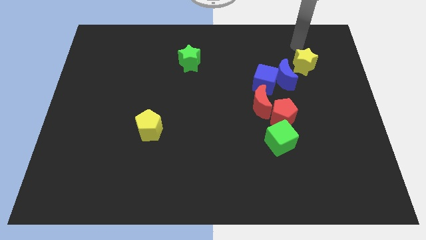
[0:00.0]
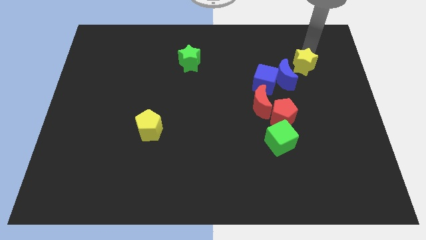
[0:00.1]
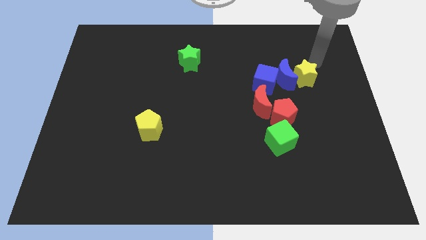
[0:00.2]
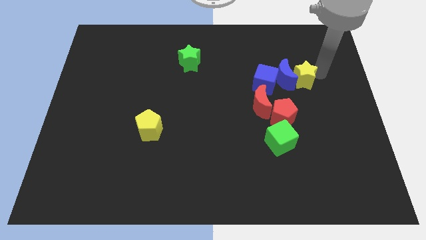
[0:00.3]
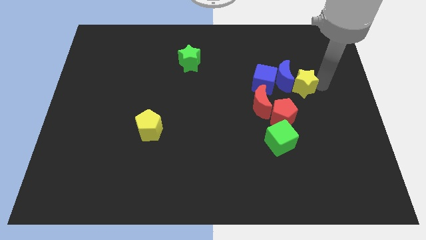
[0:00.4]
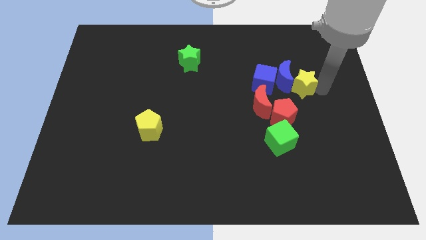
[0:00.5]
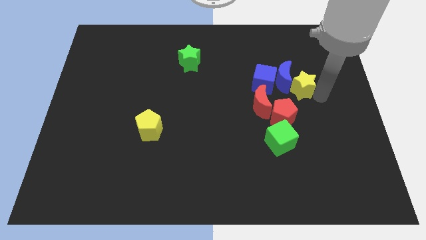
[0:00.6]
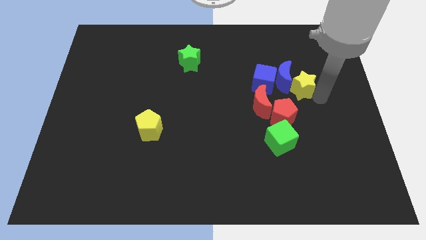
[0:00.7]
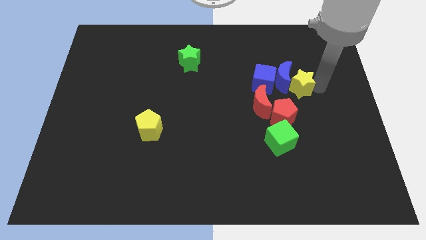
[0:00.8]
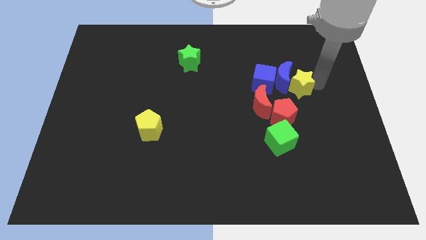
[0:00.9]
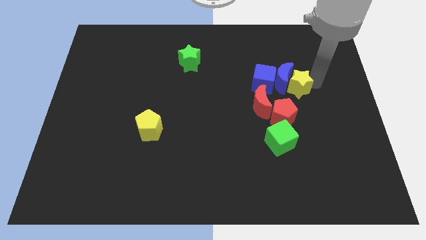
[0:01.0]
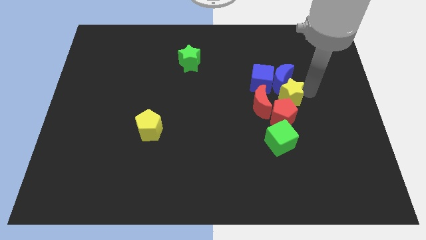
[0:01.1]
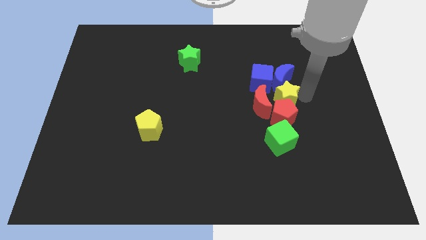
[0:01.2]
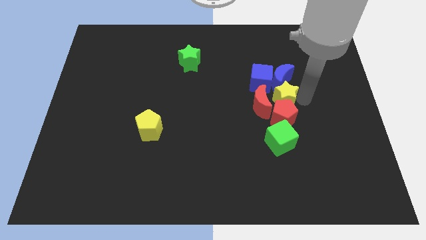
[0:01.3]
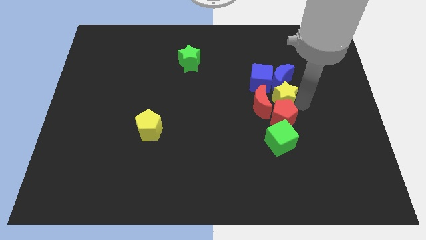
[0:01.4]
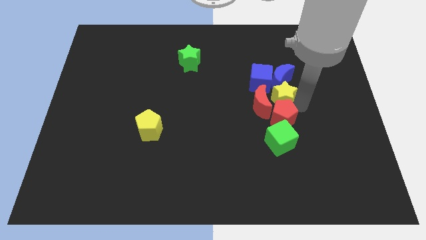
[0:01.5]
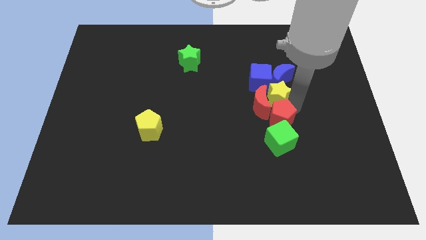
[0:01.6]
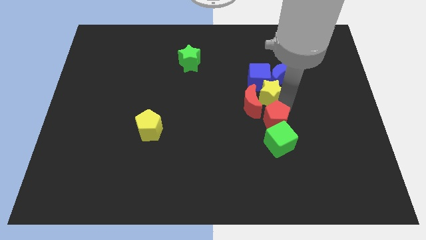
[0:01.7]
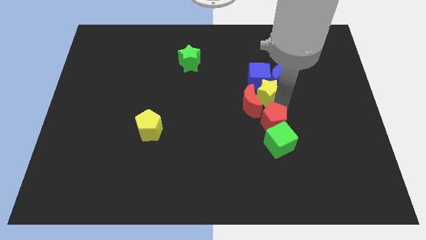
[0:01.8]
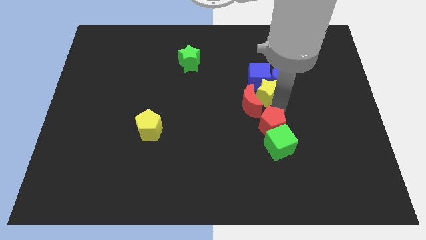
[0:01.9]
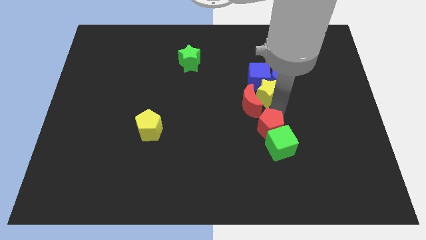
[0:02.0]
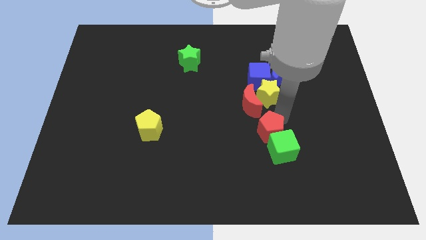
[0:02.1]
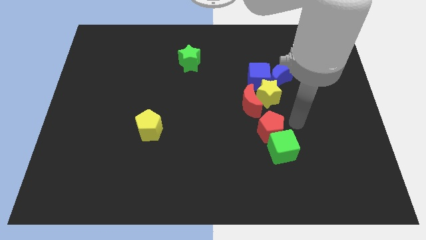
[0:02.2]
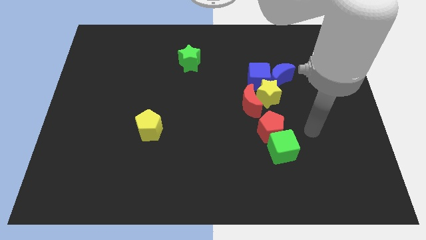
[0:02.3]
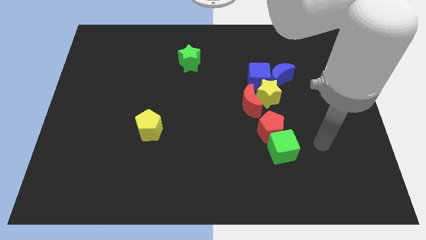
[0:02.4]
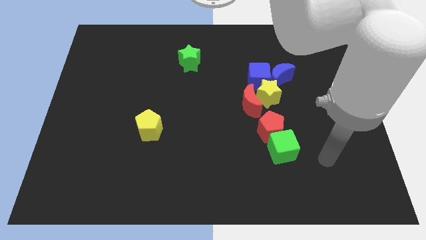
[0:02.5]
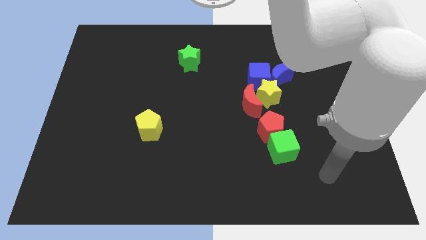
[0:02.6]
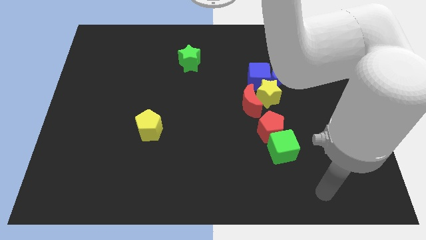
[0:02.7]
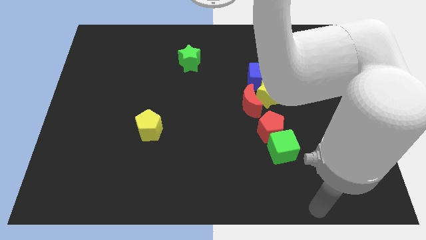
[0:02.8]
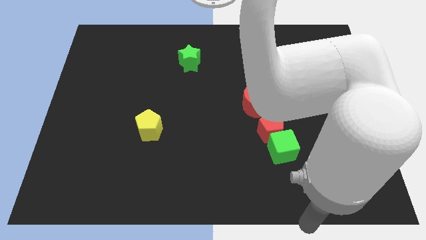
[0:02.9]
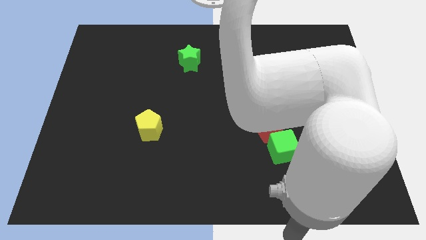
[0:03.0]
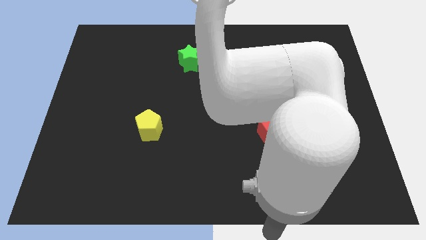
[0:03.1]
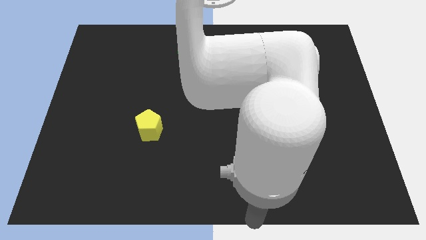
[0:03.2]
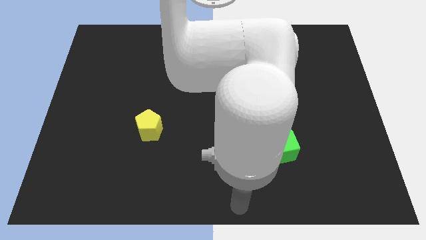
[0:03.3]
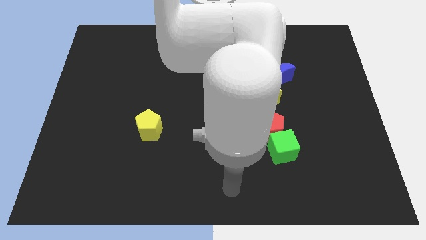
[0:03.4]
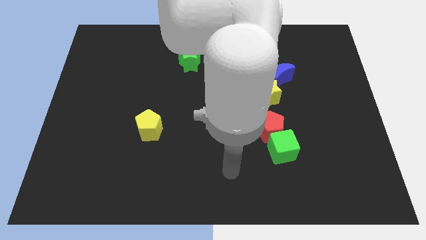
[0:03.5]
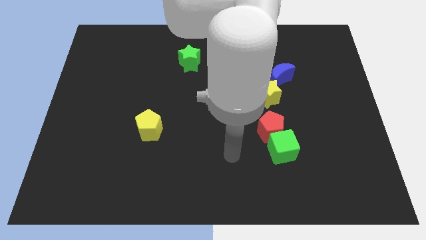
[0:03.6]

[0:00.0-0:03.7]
move the yellow star right to the red crescent

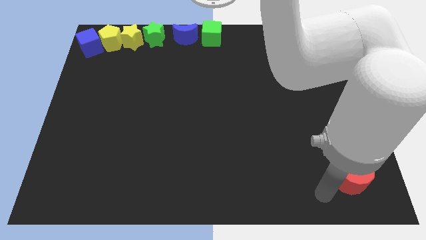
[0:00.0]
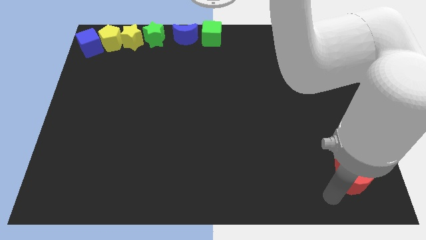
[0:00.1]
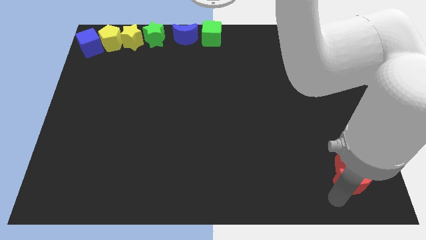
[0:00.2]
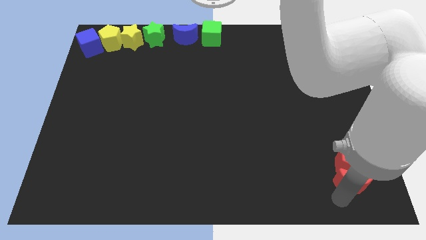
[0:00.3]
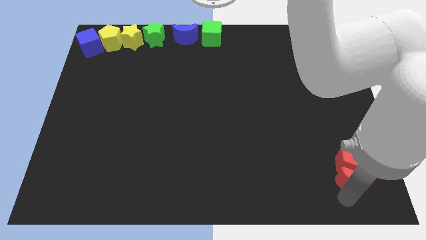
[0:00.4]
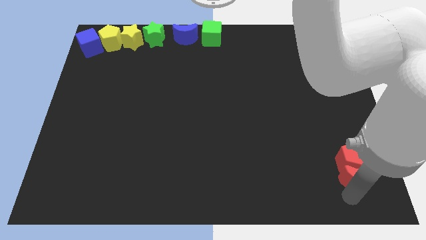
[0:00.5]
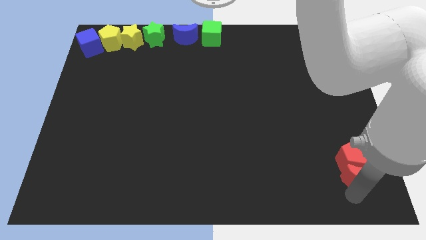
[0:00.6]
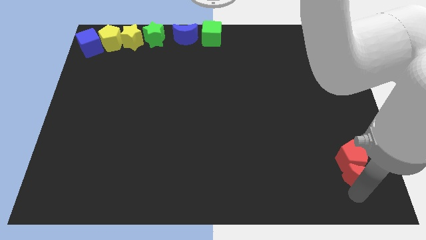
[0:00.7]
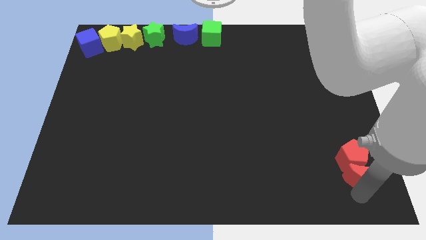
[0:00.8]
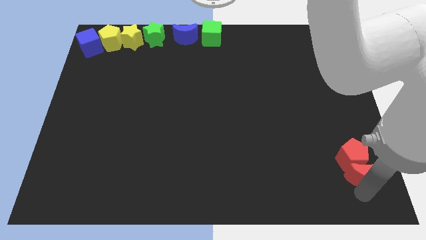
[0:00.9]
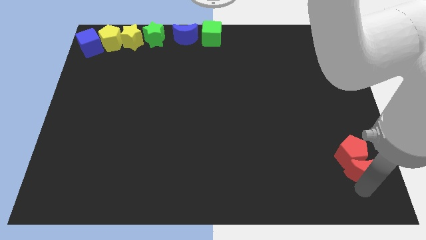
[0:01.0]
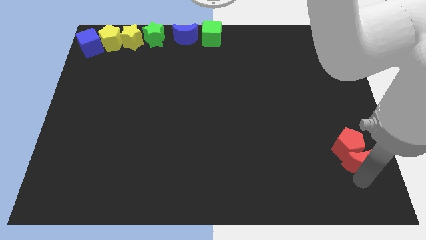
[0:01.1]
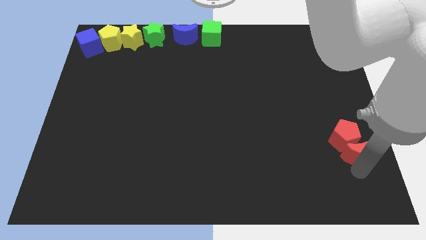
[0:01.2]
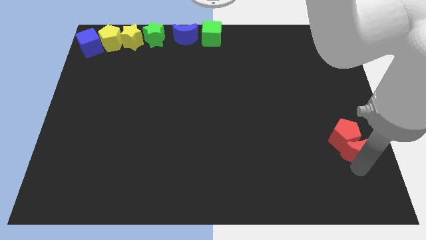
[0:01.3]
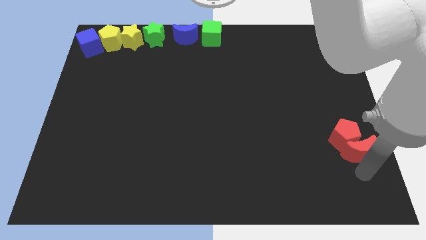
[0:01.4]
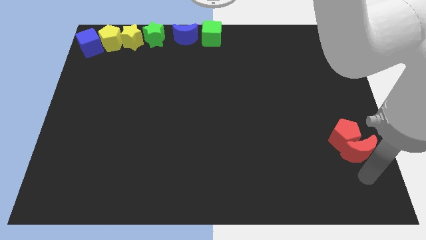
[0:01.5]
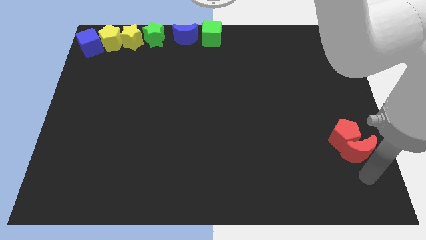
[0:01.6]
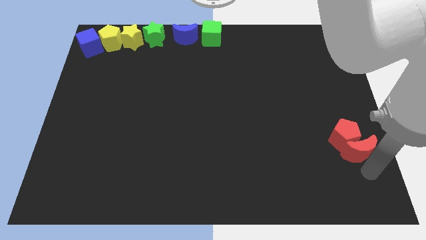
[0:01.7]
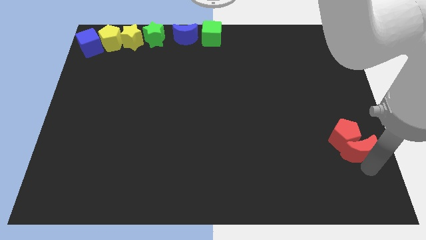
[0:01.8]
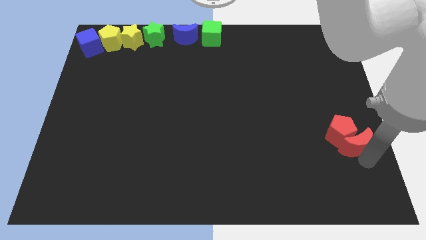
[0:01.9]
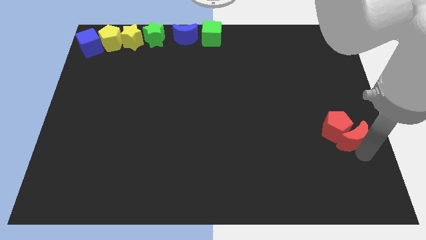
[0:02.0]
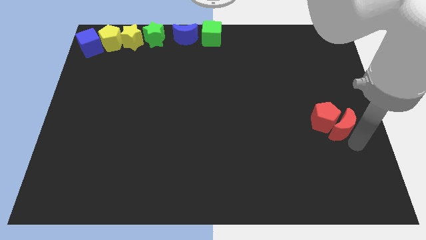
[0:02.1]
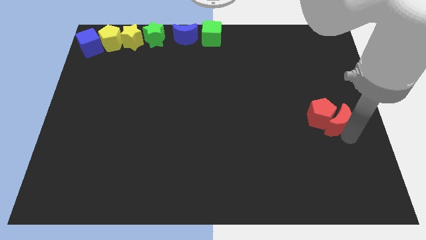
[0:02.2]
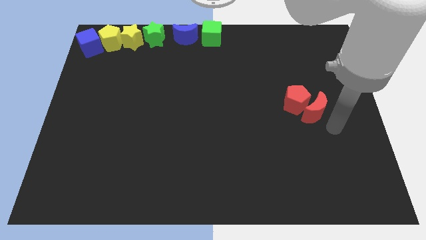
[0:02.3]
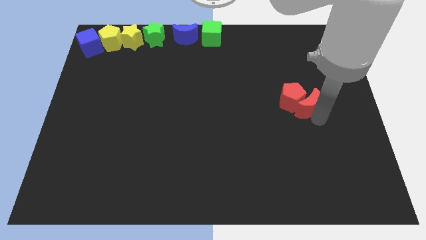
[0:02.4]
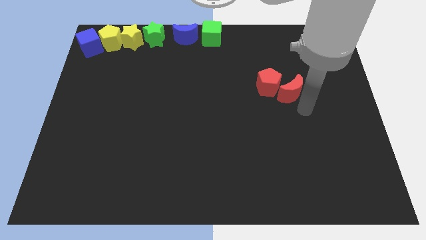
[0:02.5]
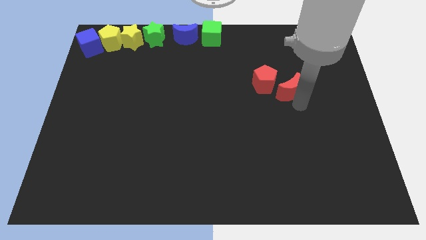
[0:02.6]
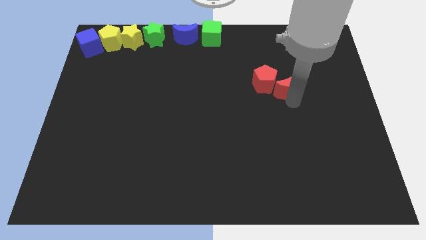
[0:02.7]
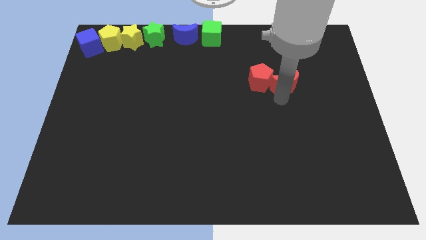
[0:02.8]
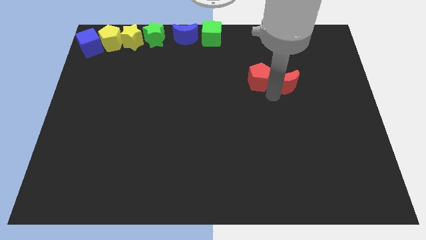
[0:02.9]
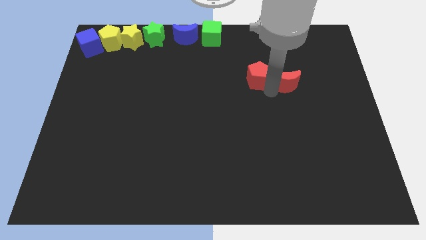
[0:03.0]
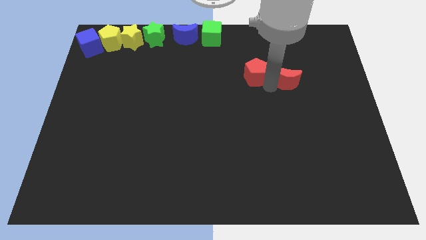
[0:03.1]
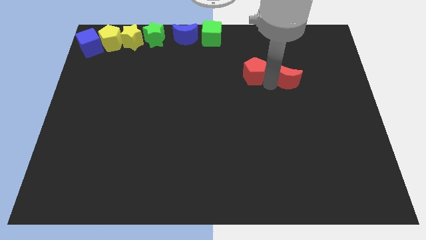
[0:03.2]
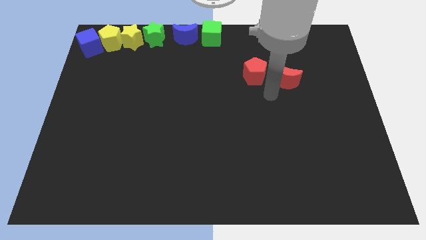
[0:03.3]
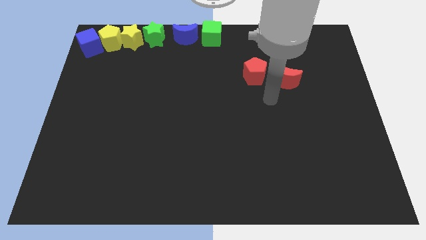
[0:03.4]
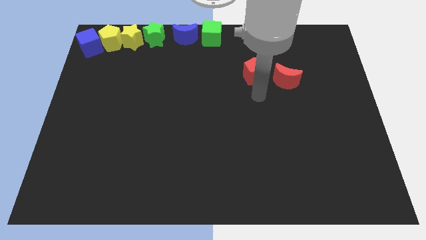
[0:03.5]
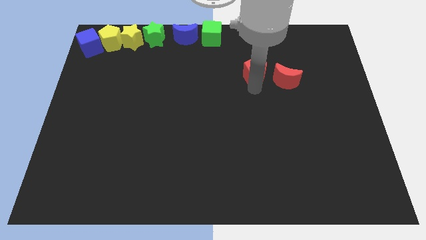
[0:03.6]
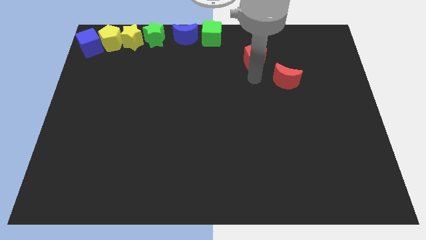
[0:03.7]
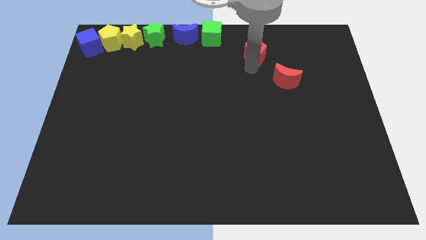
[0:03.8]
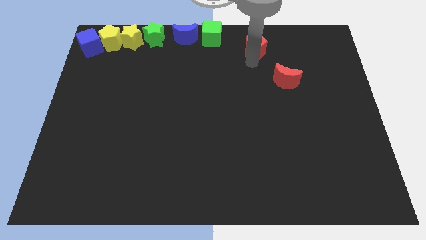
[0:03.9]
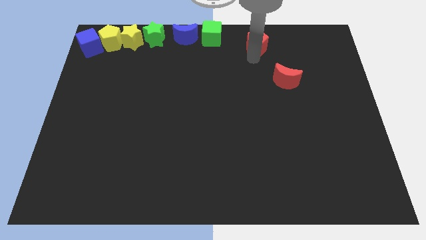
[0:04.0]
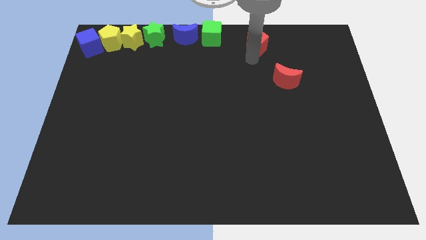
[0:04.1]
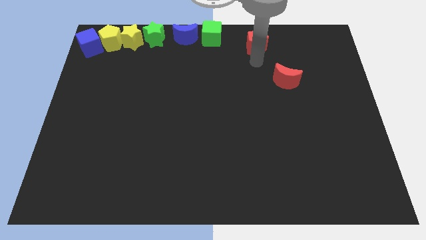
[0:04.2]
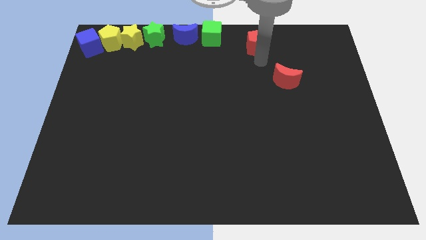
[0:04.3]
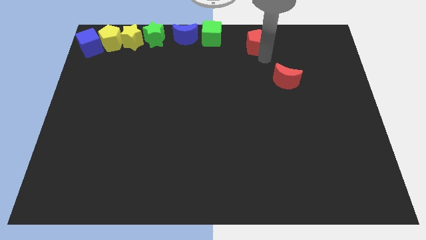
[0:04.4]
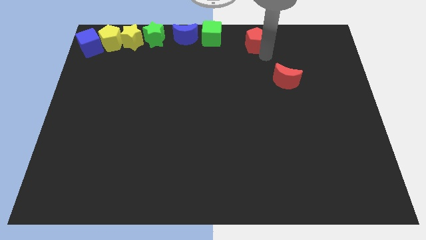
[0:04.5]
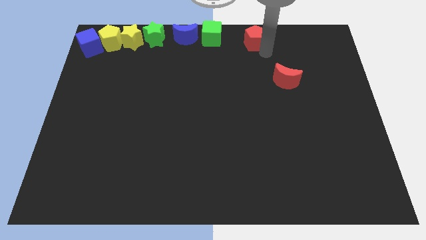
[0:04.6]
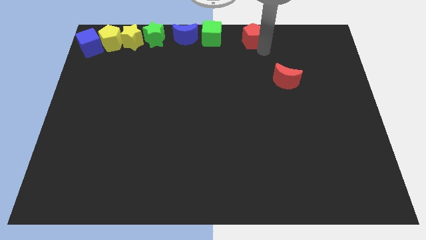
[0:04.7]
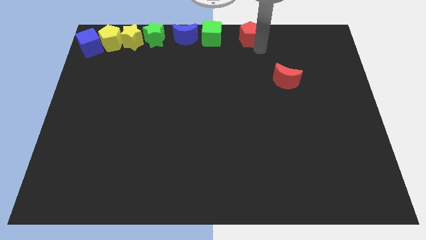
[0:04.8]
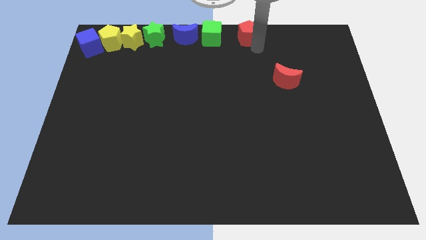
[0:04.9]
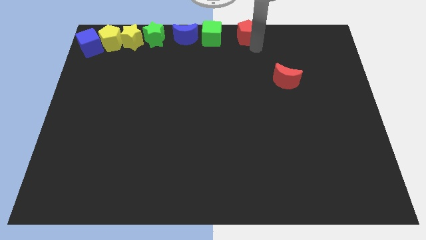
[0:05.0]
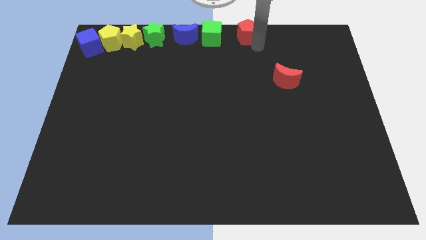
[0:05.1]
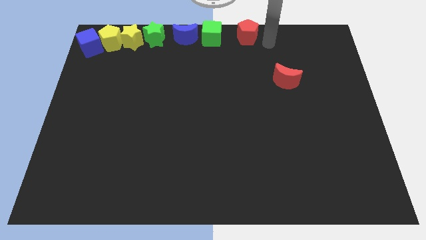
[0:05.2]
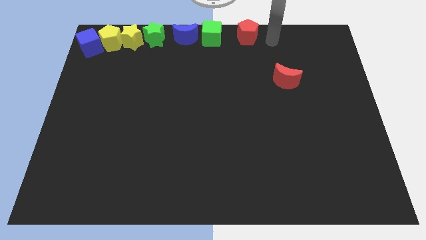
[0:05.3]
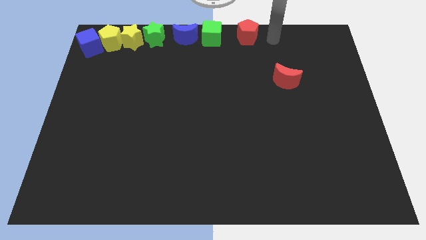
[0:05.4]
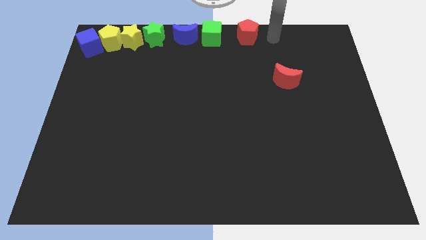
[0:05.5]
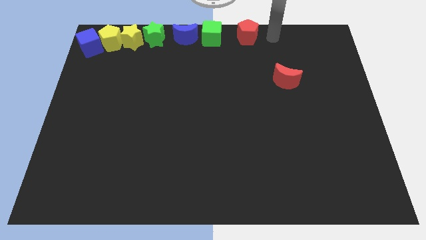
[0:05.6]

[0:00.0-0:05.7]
place the red pentagon to the right of the green cube
